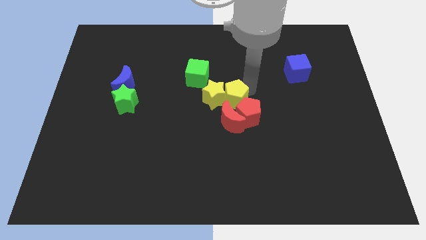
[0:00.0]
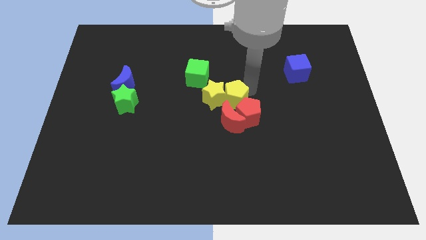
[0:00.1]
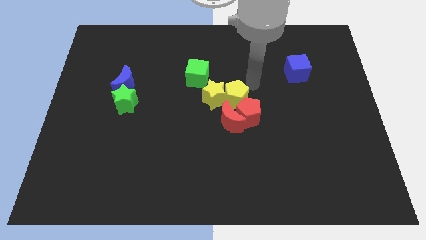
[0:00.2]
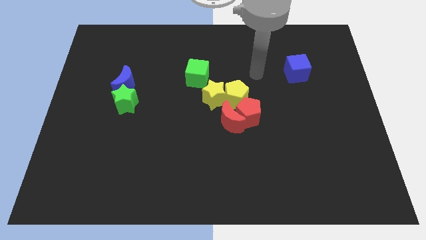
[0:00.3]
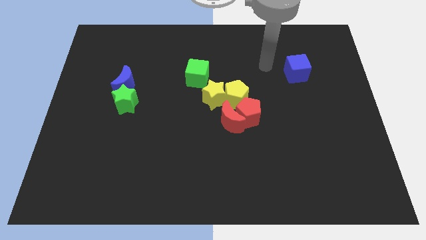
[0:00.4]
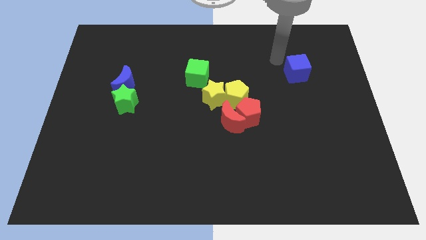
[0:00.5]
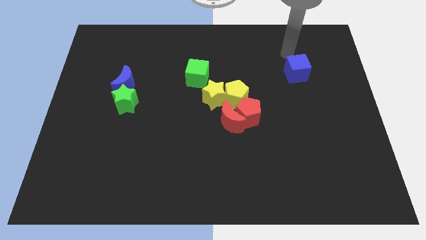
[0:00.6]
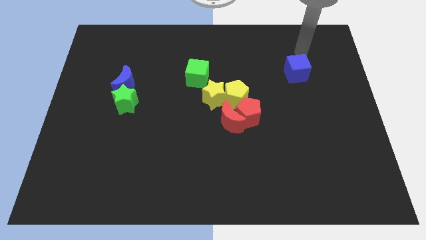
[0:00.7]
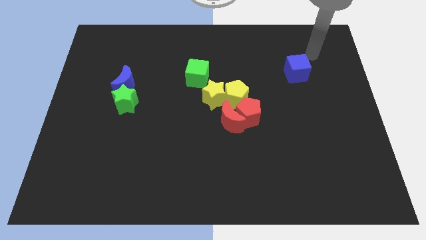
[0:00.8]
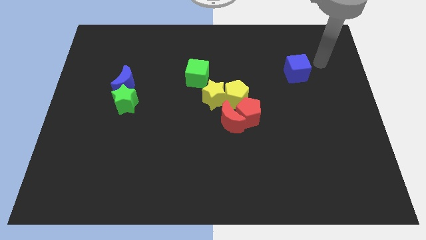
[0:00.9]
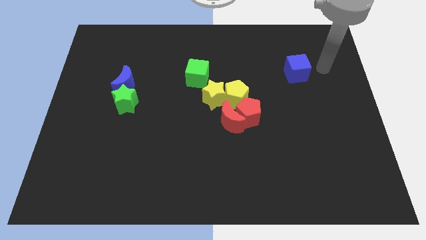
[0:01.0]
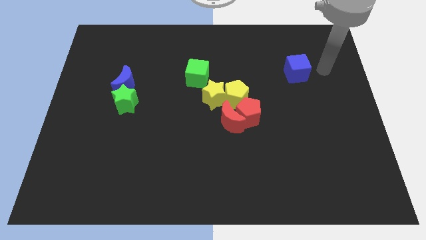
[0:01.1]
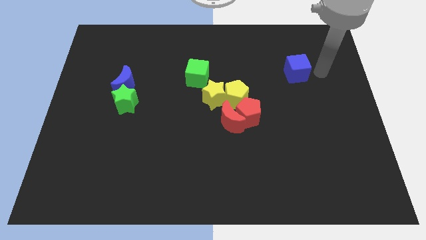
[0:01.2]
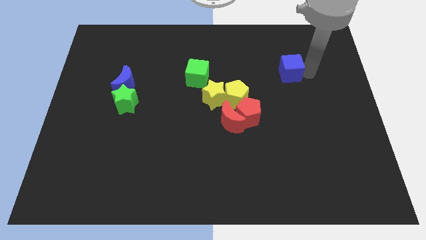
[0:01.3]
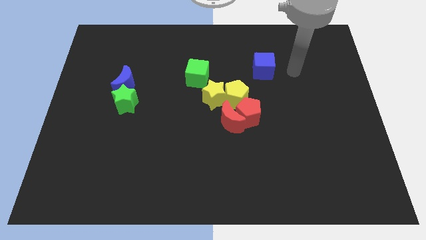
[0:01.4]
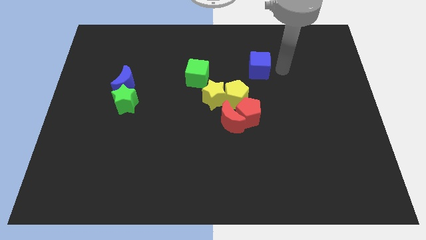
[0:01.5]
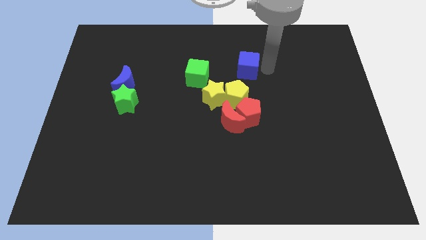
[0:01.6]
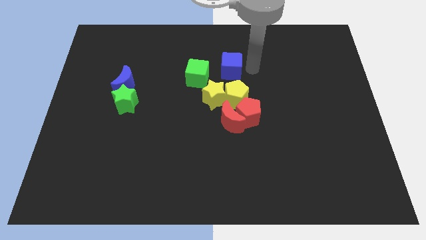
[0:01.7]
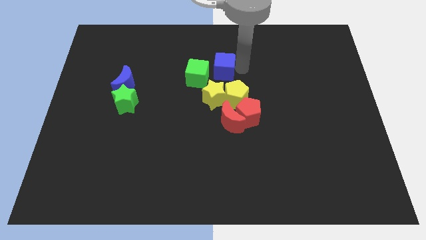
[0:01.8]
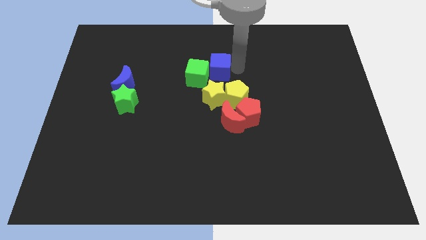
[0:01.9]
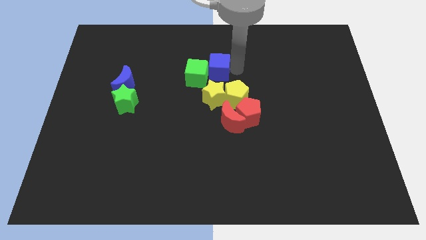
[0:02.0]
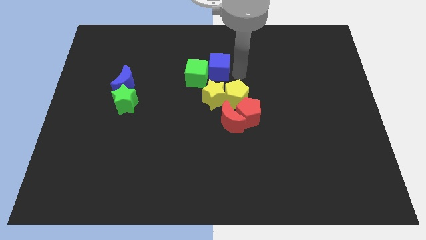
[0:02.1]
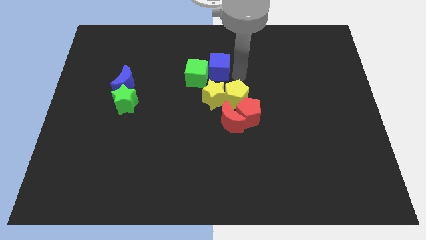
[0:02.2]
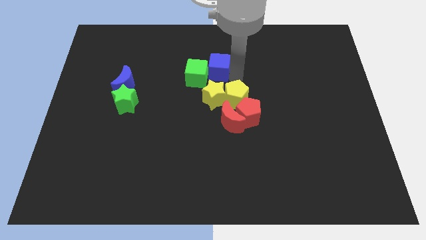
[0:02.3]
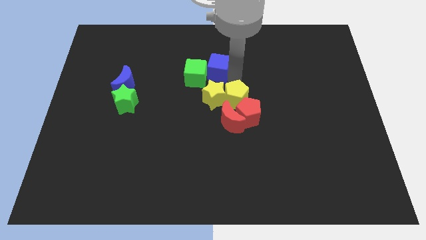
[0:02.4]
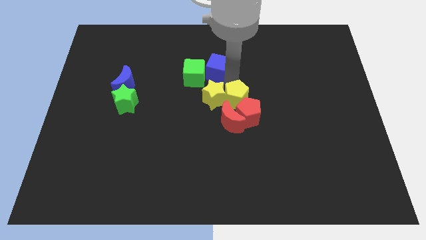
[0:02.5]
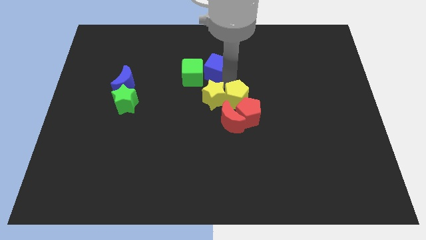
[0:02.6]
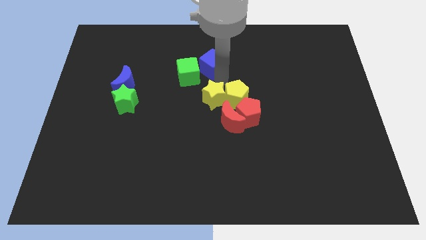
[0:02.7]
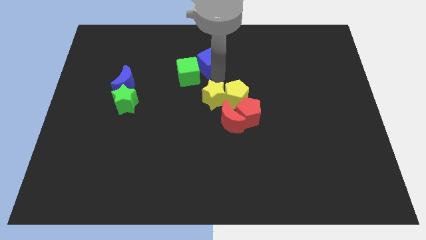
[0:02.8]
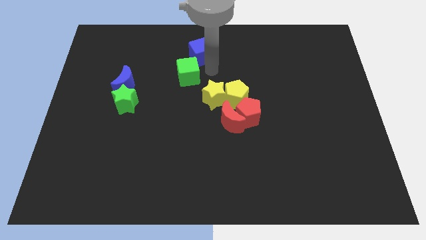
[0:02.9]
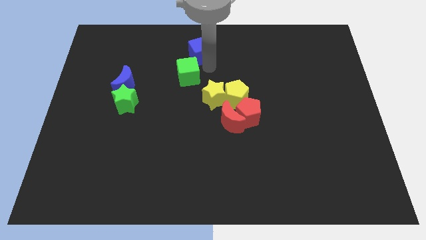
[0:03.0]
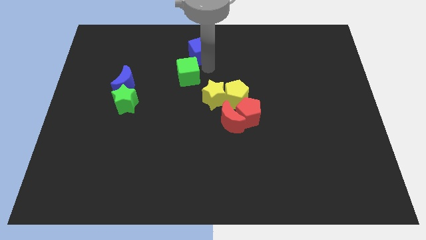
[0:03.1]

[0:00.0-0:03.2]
place the blue cube at the top side of the green cube

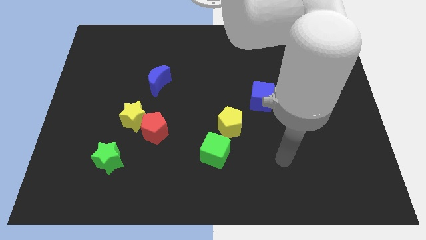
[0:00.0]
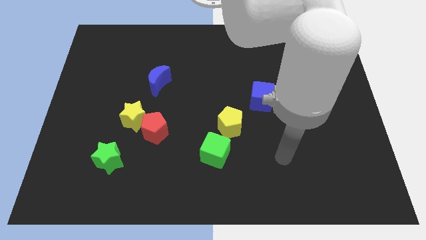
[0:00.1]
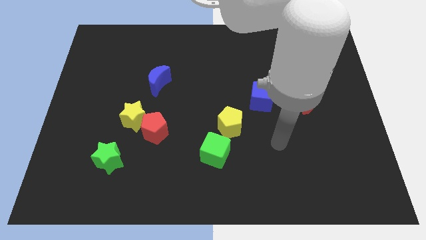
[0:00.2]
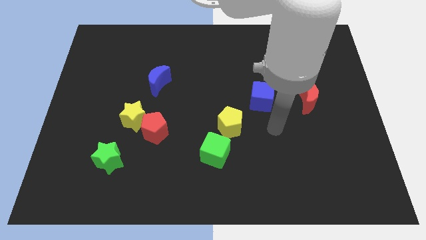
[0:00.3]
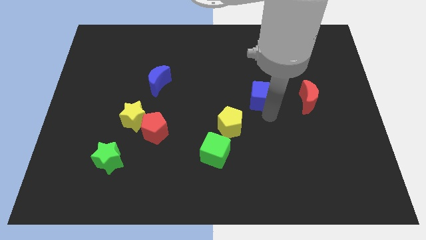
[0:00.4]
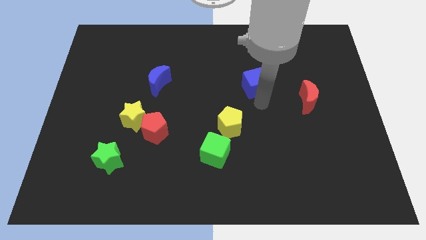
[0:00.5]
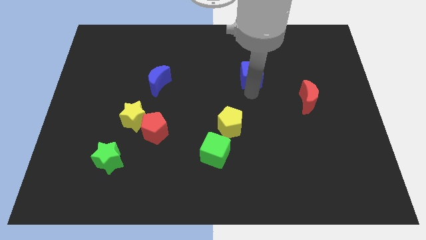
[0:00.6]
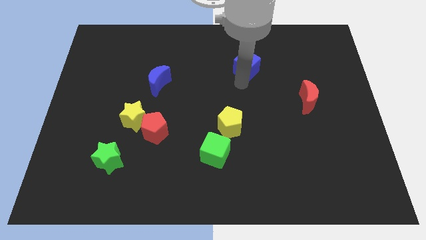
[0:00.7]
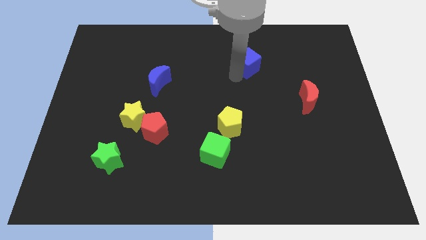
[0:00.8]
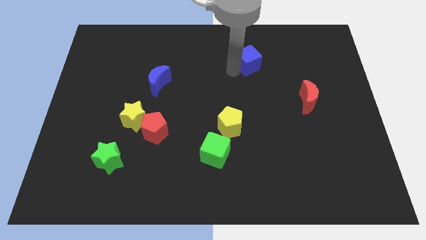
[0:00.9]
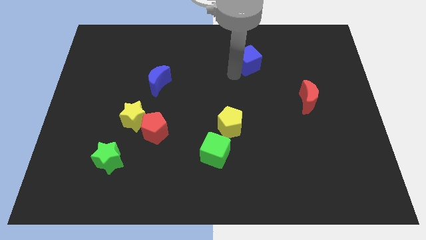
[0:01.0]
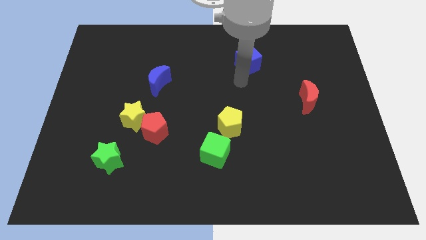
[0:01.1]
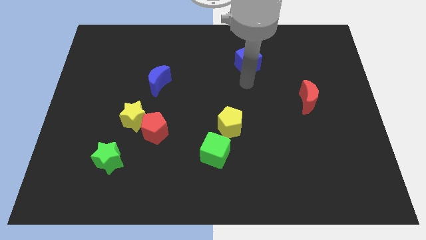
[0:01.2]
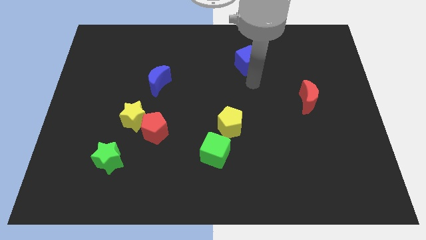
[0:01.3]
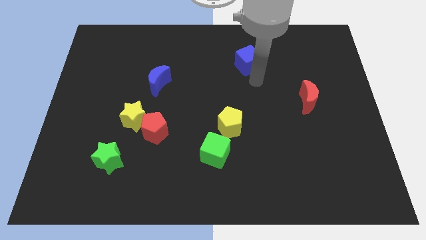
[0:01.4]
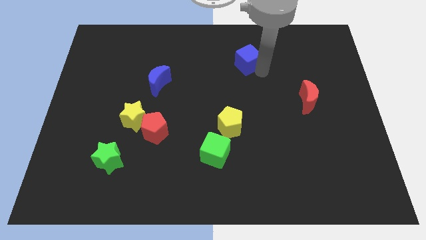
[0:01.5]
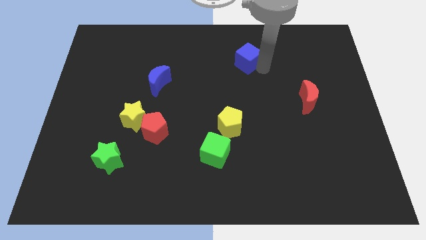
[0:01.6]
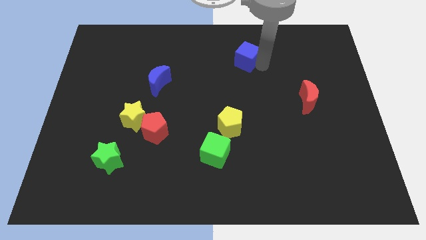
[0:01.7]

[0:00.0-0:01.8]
place blue cube to the top of yellow pentagon

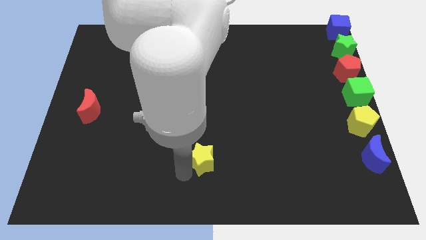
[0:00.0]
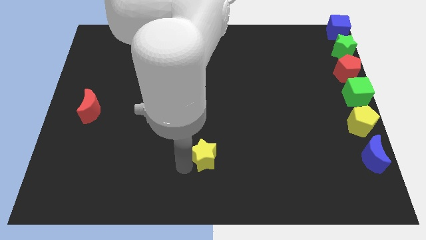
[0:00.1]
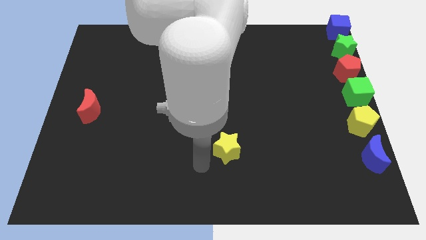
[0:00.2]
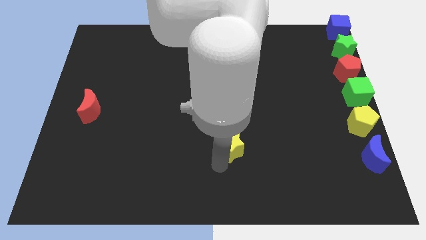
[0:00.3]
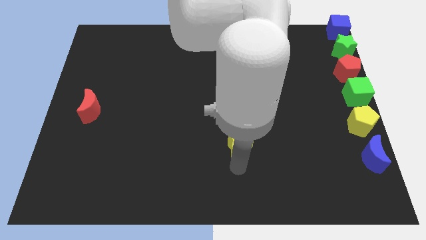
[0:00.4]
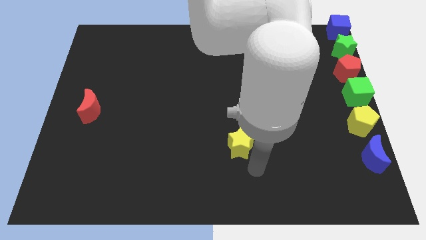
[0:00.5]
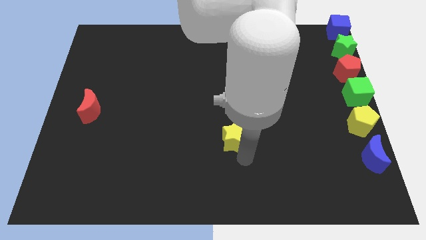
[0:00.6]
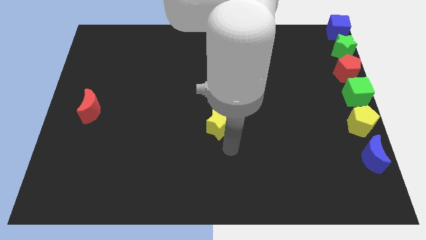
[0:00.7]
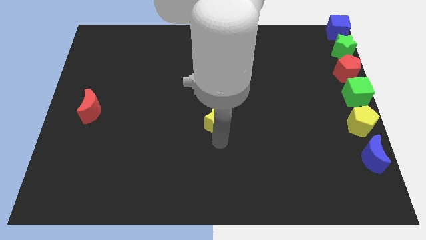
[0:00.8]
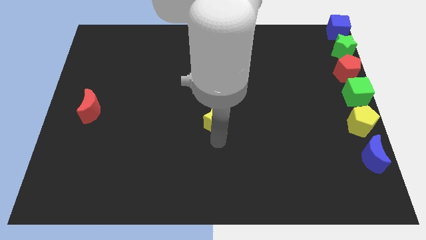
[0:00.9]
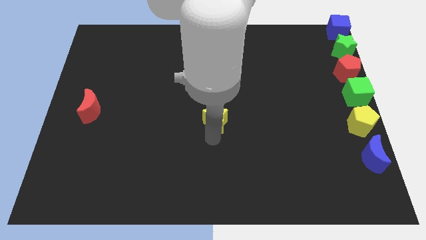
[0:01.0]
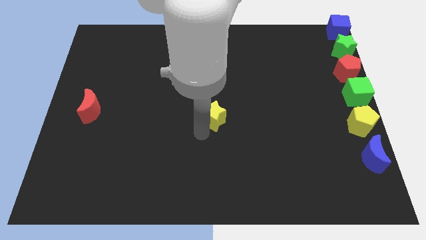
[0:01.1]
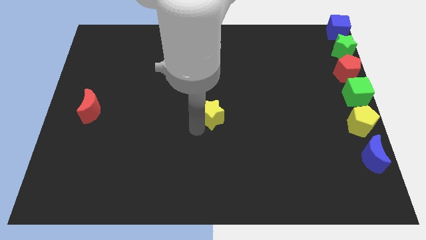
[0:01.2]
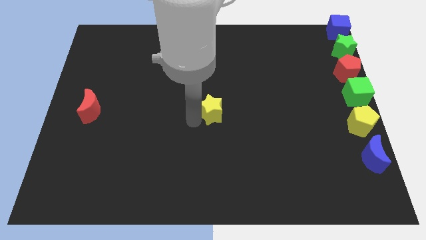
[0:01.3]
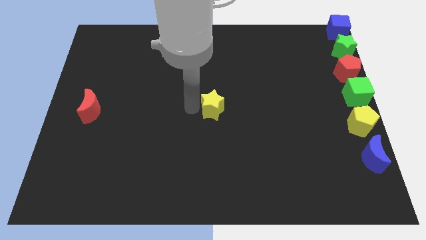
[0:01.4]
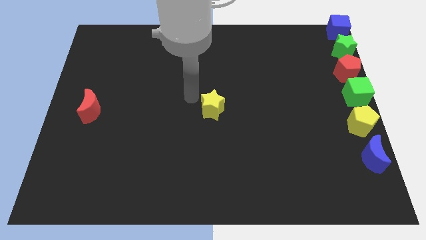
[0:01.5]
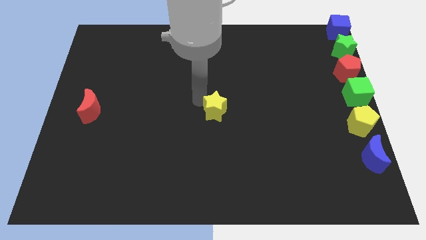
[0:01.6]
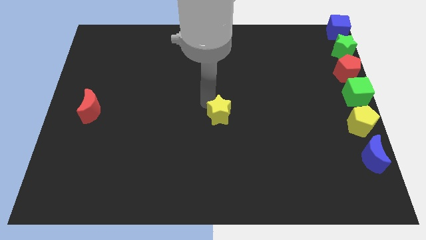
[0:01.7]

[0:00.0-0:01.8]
push the yellow star to the center of the board

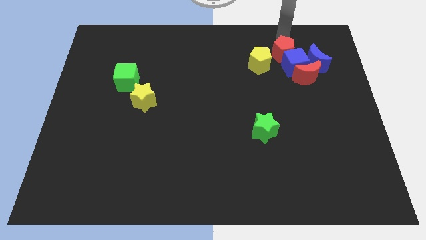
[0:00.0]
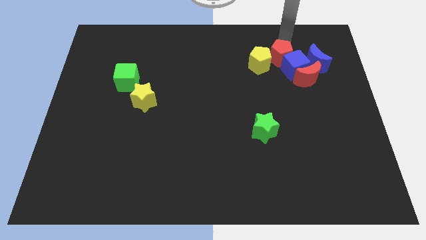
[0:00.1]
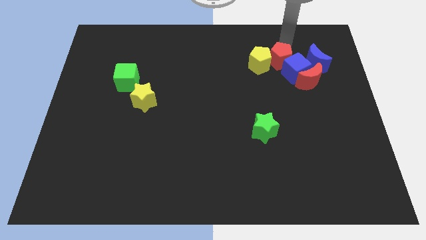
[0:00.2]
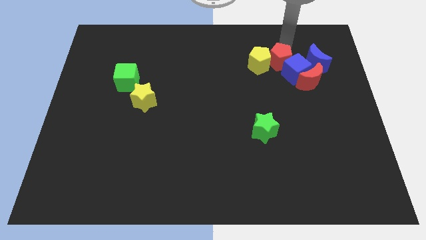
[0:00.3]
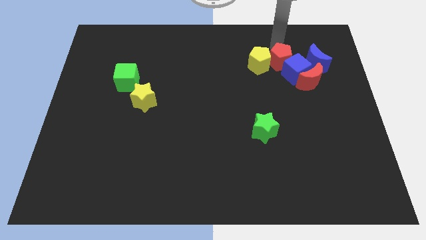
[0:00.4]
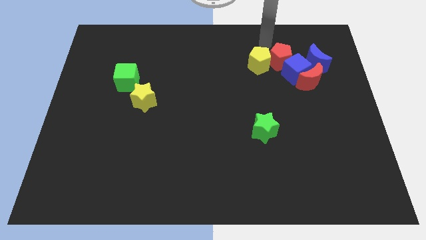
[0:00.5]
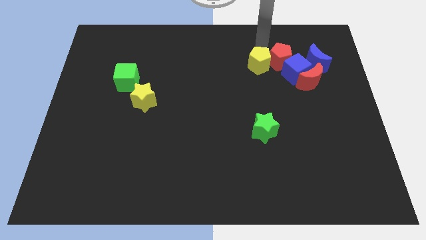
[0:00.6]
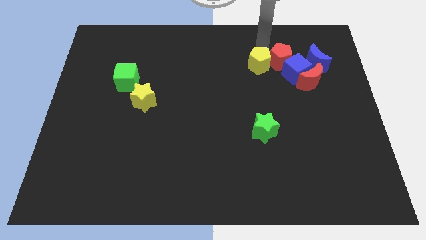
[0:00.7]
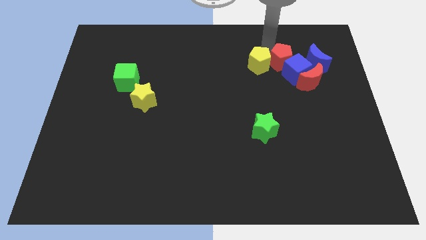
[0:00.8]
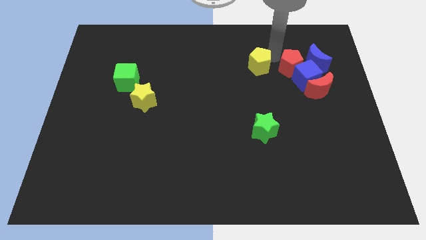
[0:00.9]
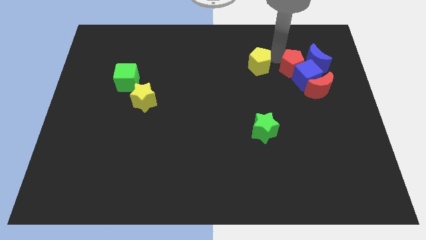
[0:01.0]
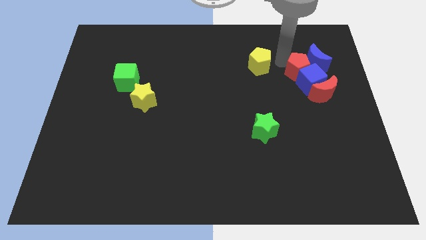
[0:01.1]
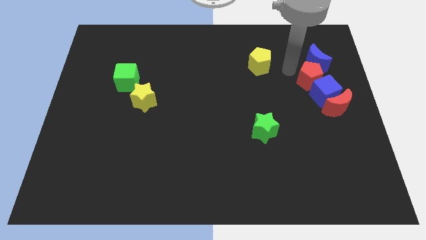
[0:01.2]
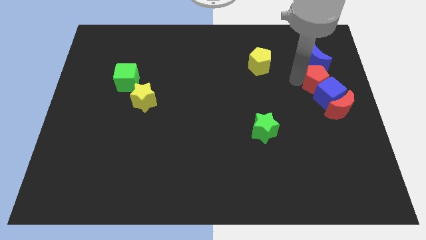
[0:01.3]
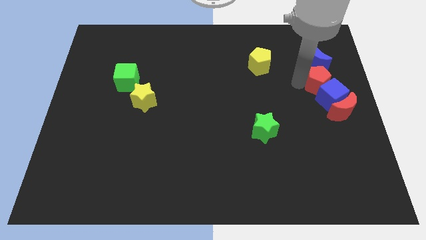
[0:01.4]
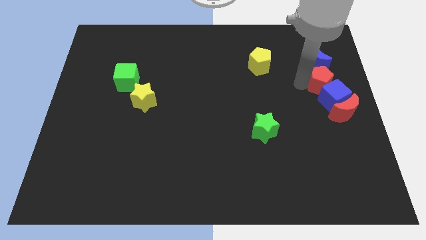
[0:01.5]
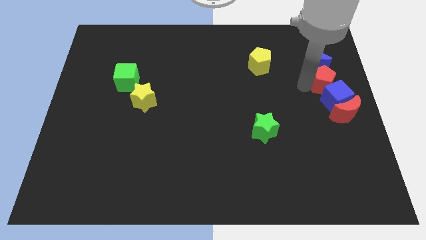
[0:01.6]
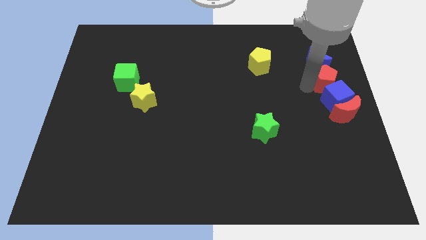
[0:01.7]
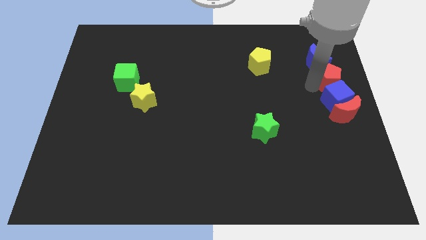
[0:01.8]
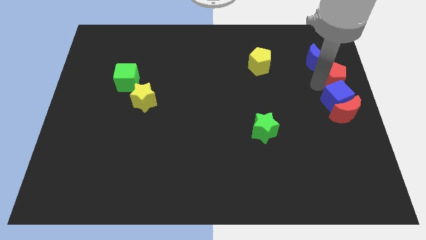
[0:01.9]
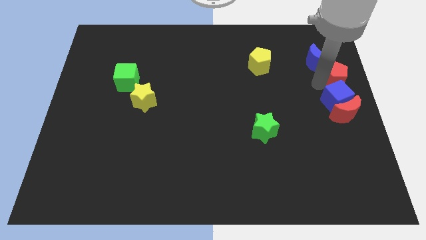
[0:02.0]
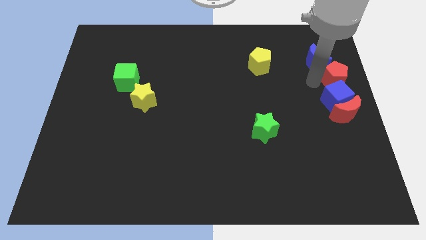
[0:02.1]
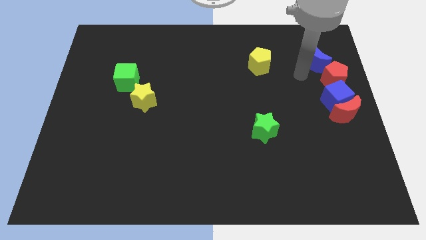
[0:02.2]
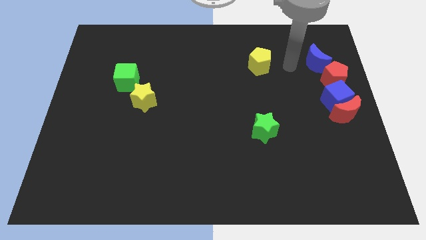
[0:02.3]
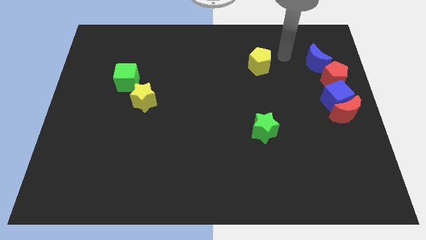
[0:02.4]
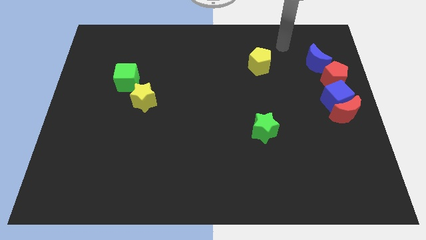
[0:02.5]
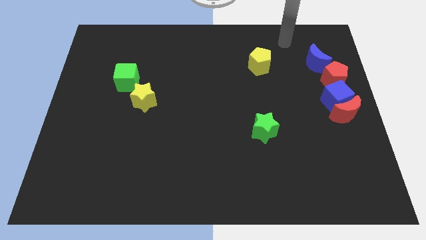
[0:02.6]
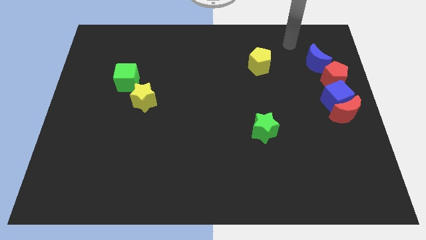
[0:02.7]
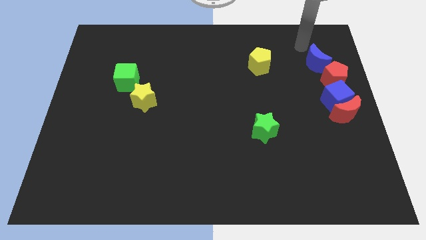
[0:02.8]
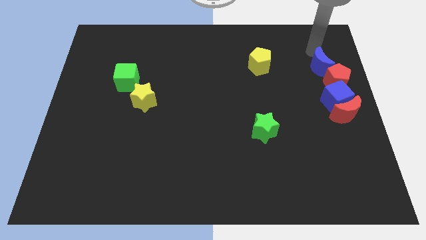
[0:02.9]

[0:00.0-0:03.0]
push the red blocks and blue cube to the center right of the board
